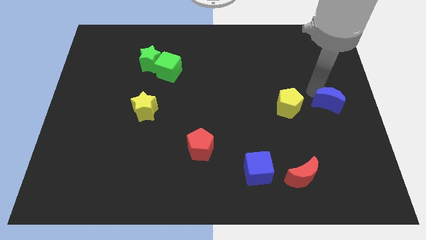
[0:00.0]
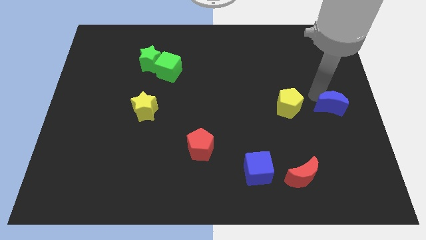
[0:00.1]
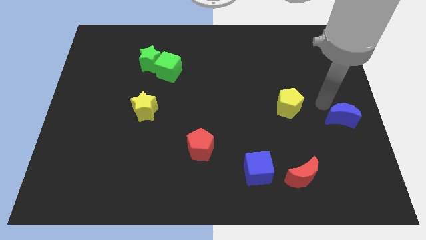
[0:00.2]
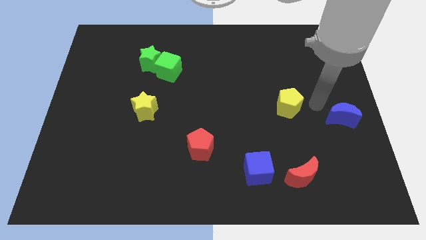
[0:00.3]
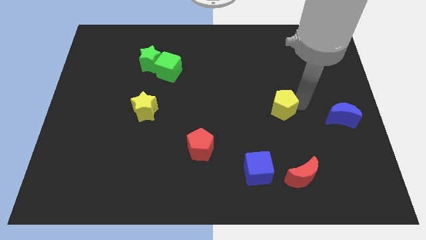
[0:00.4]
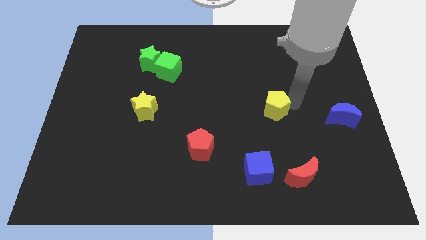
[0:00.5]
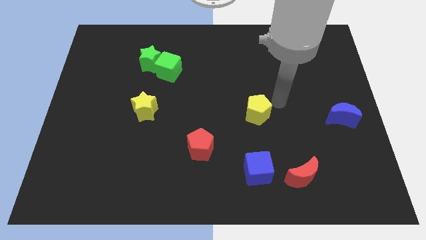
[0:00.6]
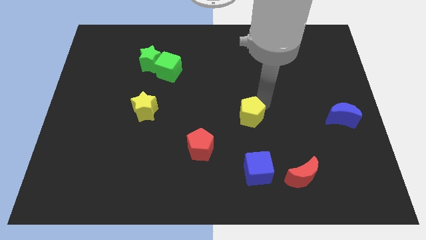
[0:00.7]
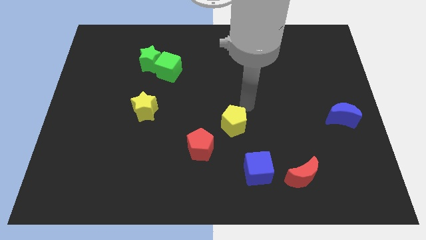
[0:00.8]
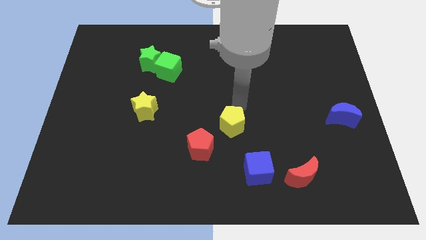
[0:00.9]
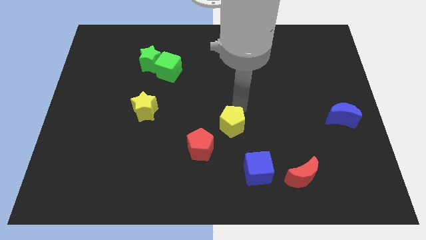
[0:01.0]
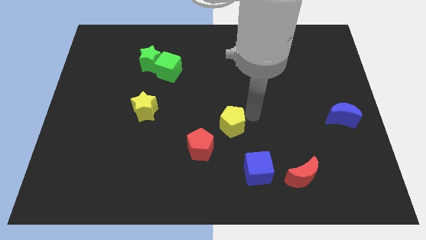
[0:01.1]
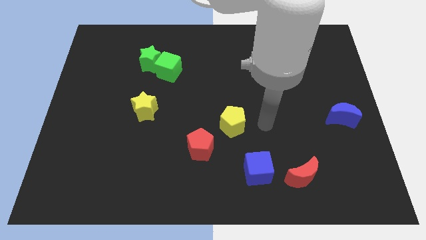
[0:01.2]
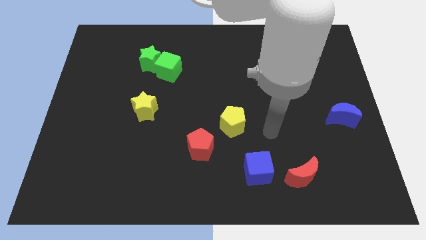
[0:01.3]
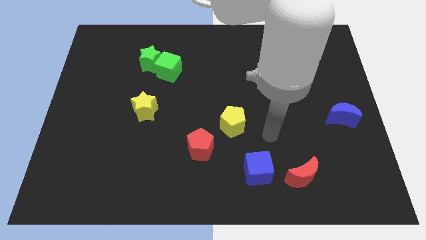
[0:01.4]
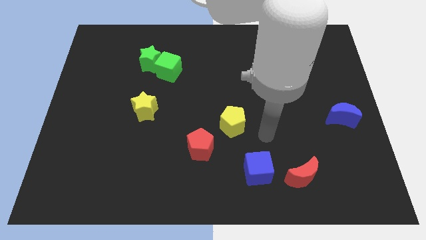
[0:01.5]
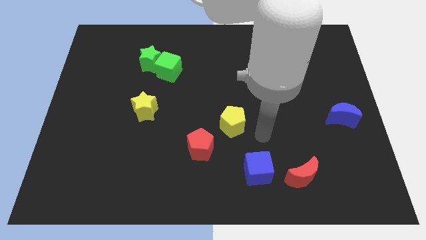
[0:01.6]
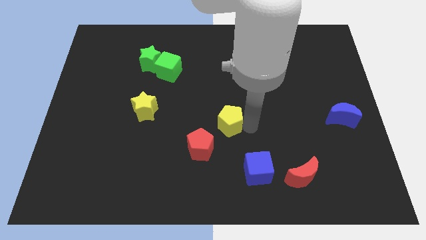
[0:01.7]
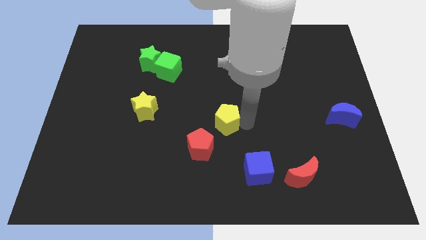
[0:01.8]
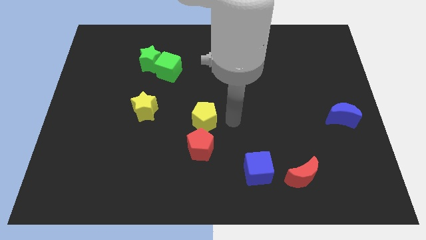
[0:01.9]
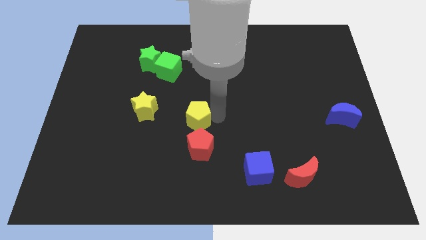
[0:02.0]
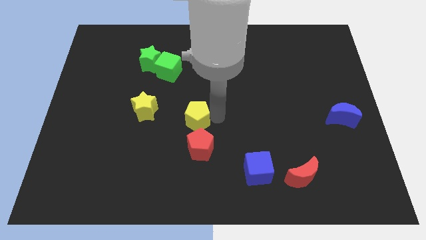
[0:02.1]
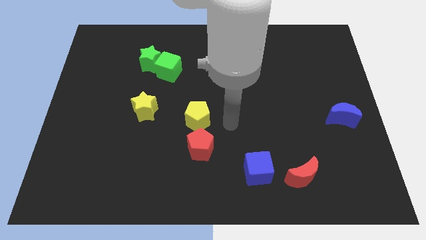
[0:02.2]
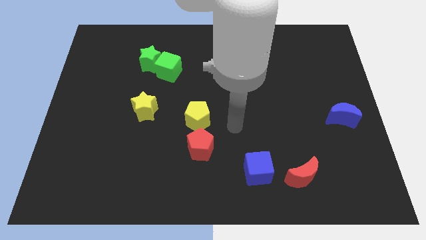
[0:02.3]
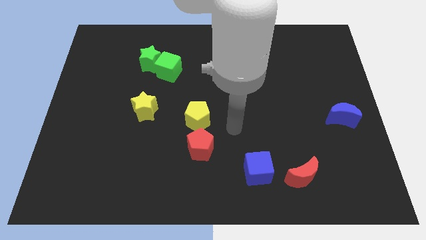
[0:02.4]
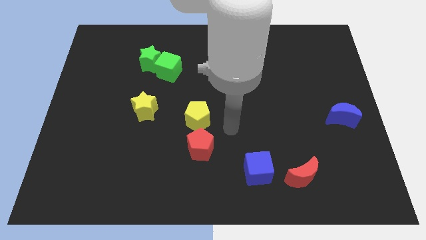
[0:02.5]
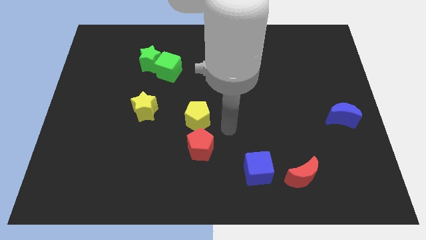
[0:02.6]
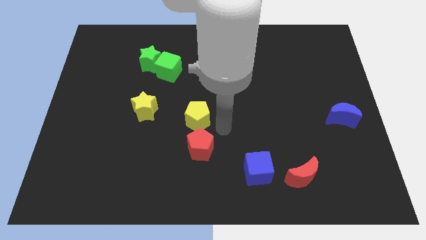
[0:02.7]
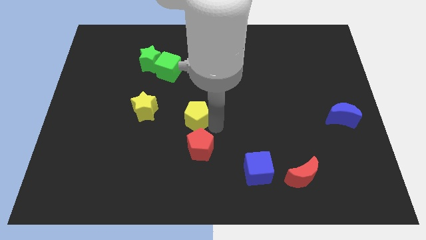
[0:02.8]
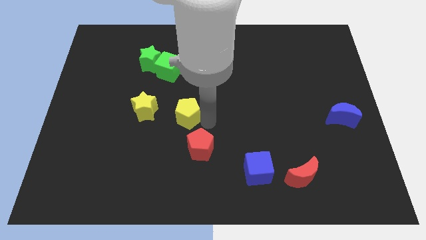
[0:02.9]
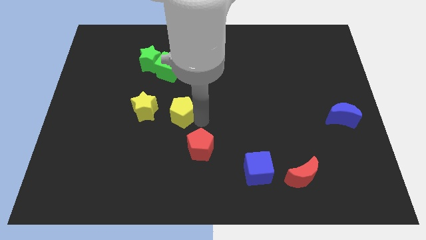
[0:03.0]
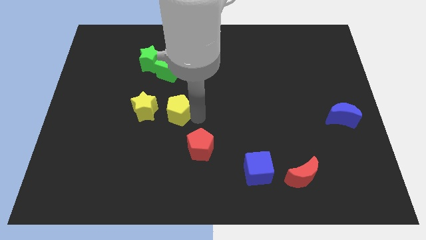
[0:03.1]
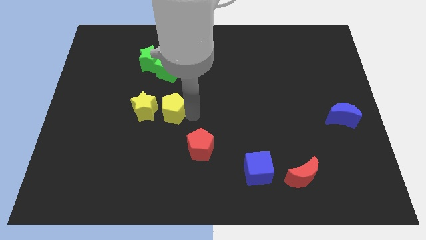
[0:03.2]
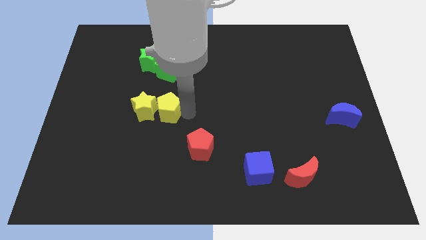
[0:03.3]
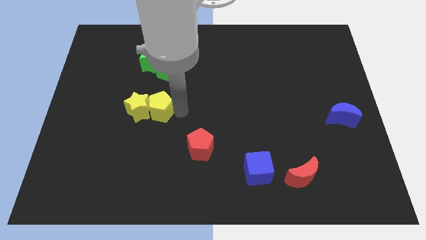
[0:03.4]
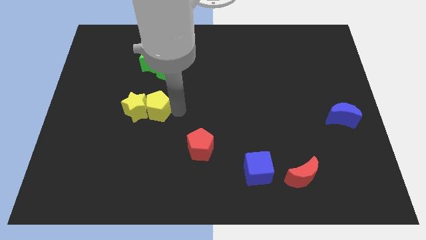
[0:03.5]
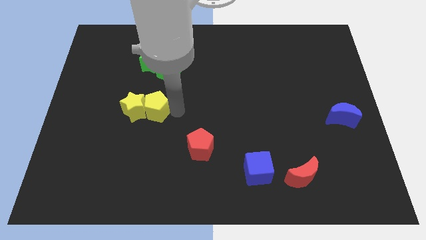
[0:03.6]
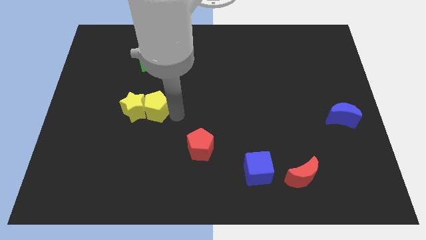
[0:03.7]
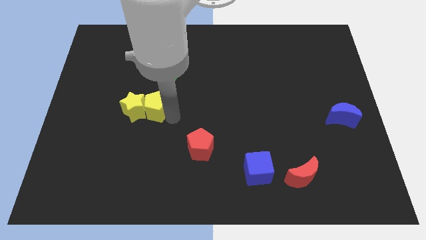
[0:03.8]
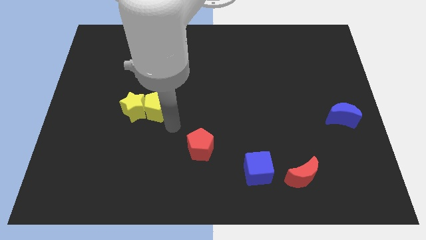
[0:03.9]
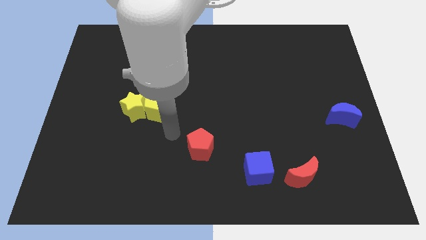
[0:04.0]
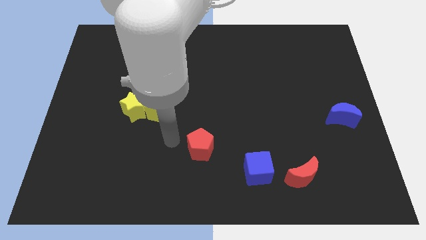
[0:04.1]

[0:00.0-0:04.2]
push the yellow pentagon parallel to the yellow star

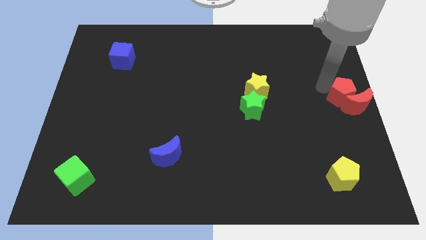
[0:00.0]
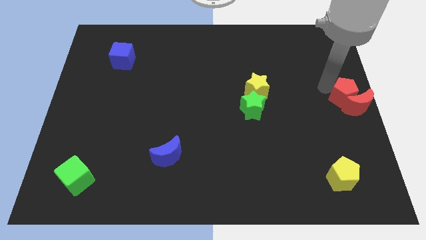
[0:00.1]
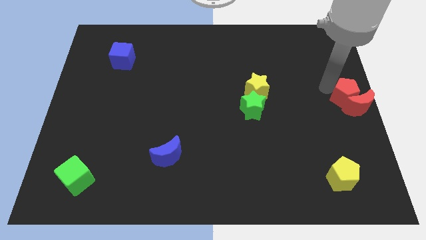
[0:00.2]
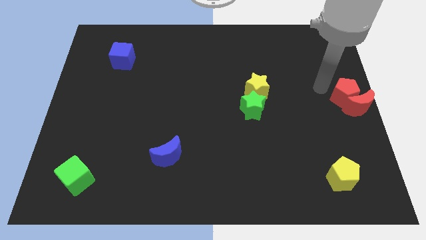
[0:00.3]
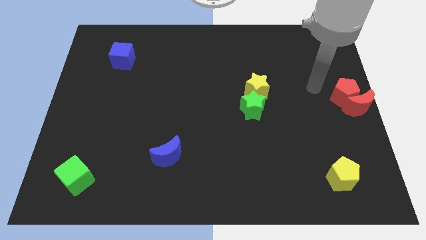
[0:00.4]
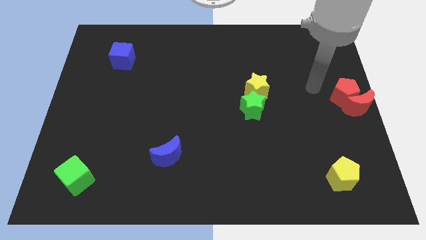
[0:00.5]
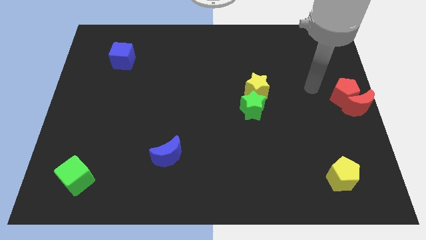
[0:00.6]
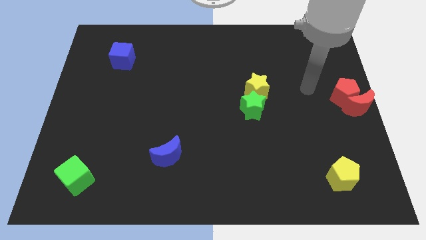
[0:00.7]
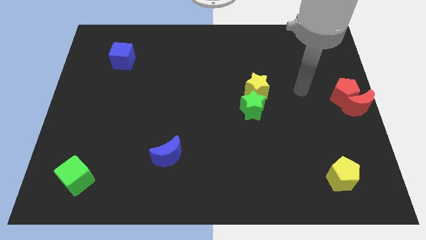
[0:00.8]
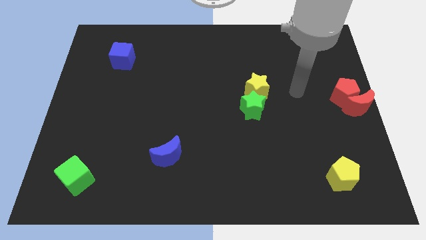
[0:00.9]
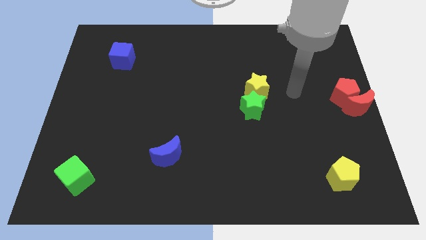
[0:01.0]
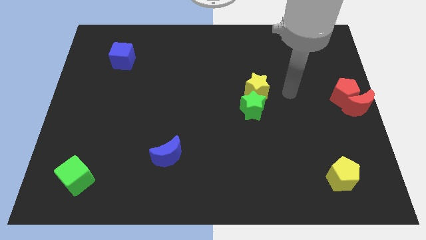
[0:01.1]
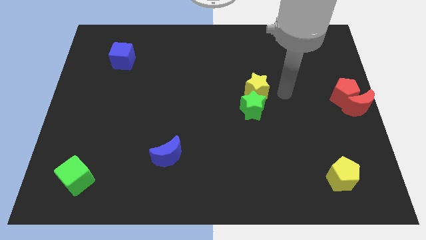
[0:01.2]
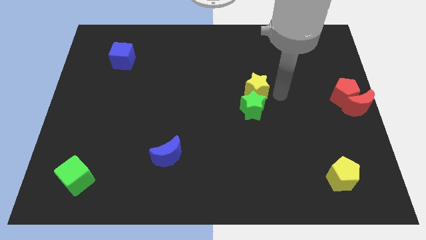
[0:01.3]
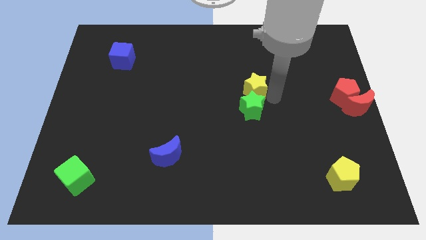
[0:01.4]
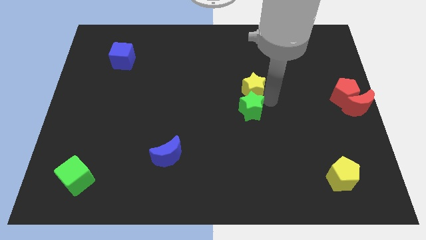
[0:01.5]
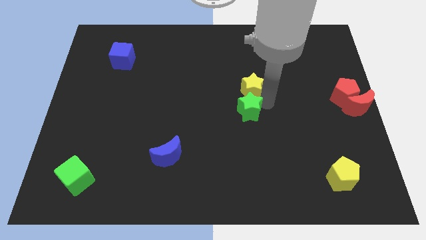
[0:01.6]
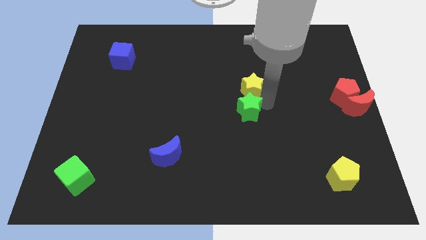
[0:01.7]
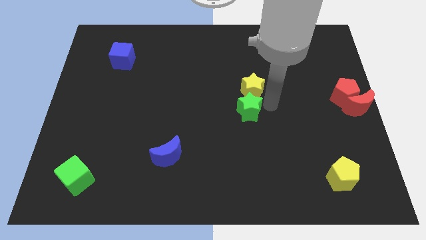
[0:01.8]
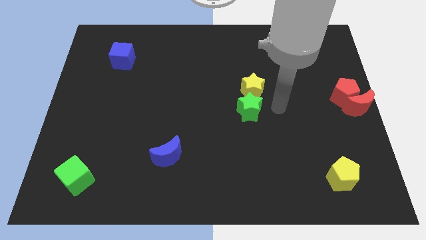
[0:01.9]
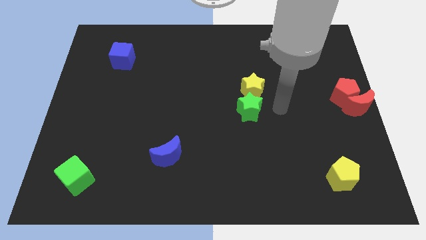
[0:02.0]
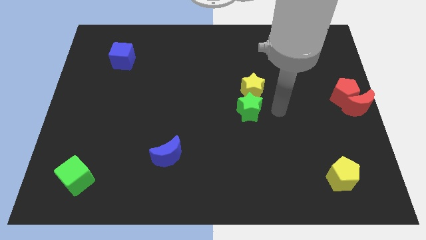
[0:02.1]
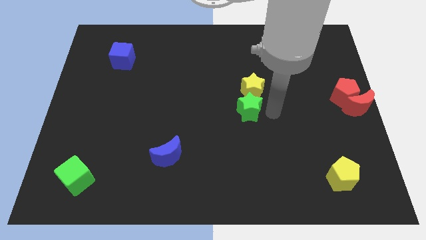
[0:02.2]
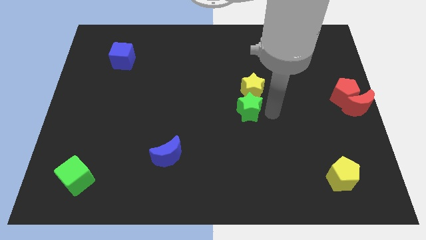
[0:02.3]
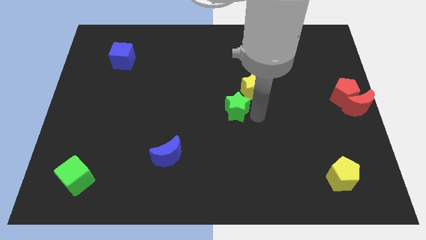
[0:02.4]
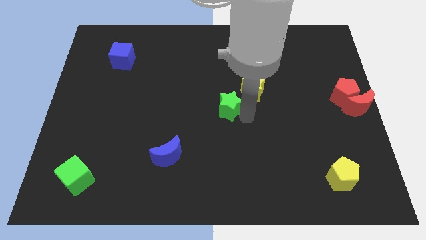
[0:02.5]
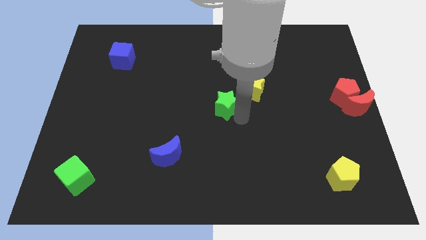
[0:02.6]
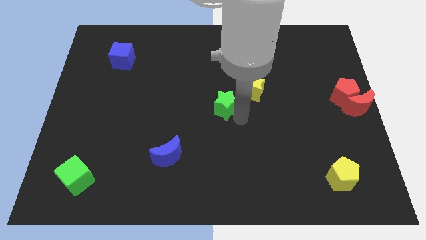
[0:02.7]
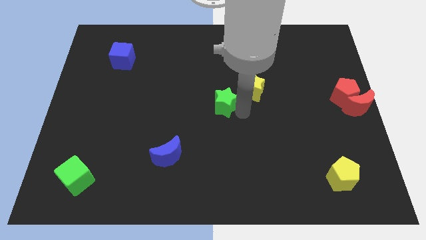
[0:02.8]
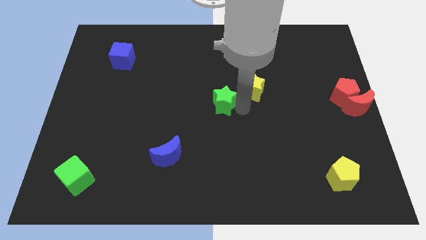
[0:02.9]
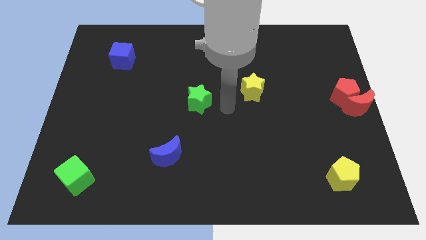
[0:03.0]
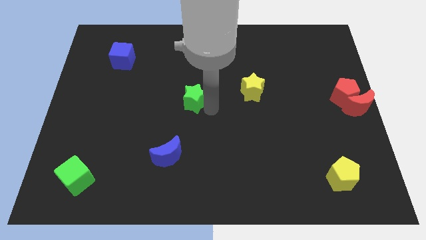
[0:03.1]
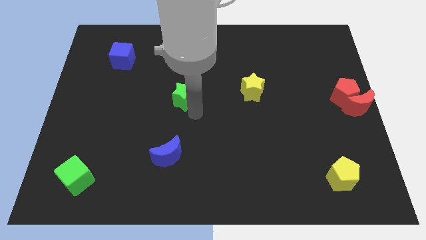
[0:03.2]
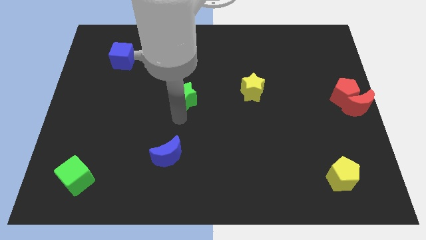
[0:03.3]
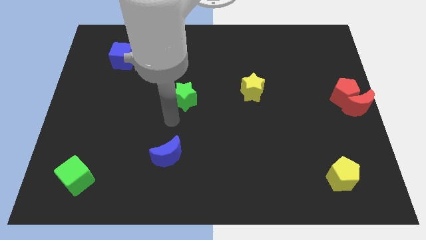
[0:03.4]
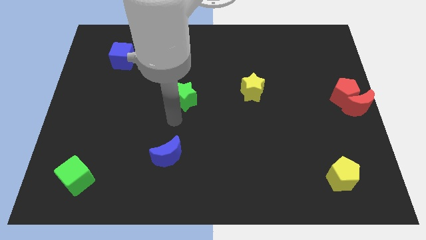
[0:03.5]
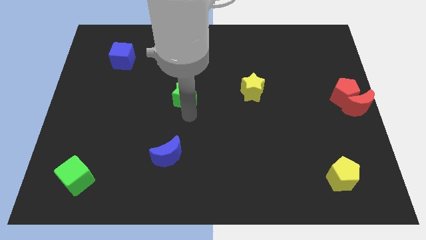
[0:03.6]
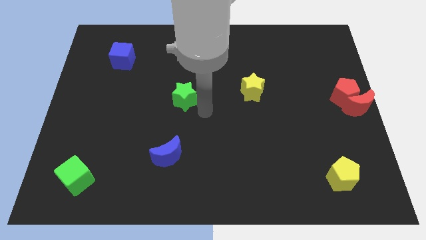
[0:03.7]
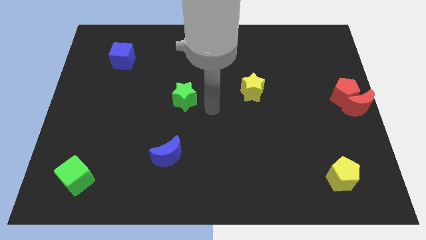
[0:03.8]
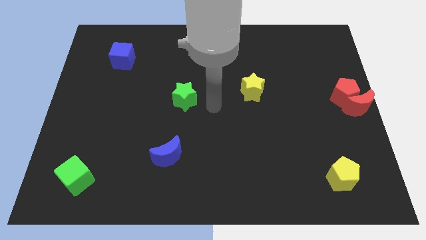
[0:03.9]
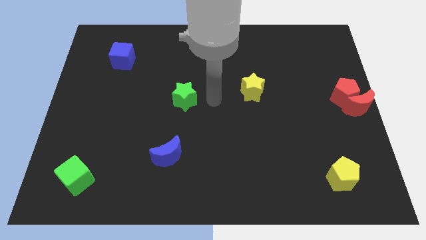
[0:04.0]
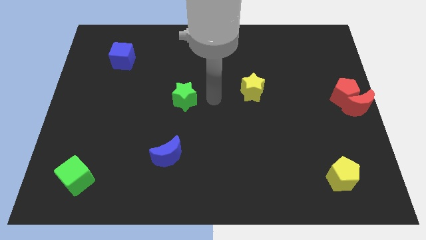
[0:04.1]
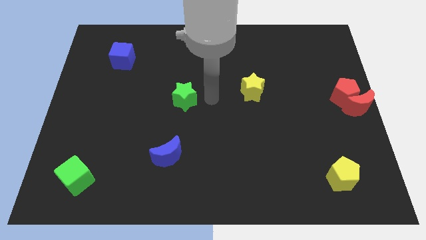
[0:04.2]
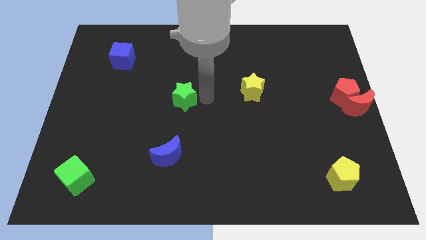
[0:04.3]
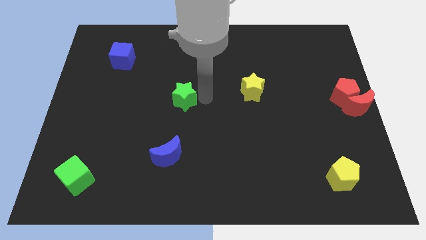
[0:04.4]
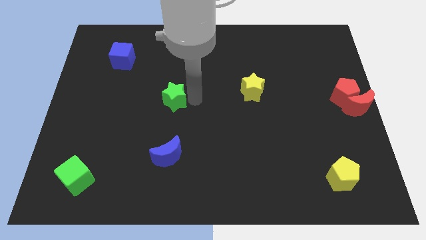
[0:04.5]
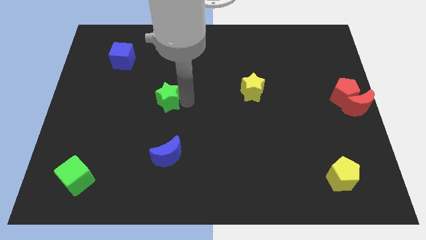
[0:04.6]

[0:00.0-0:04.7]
place the green star vertically above the blue crescent
